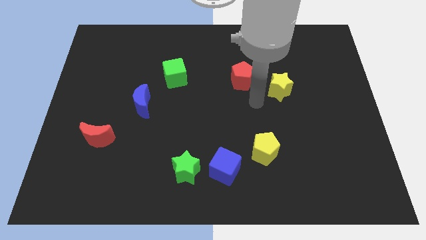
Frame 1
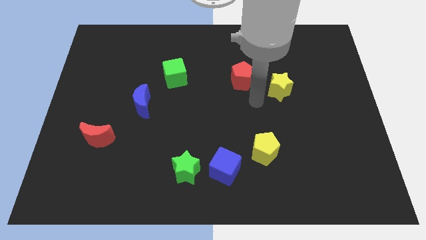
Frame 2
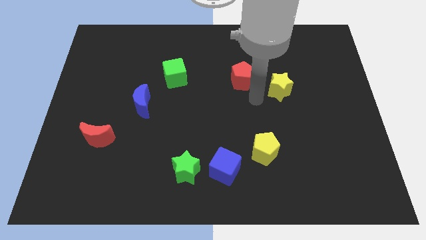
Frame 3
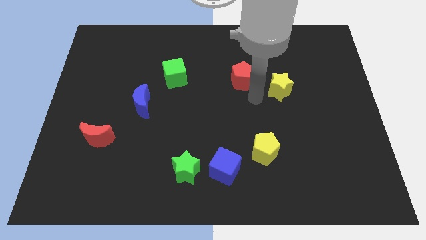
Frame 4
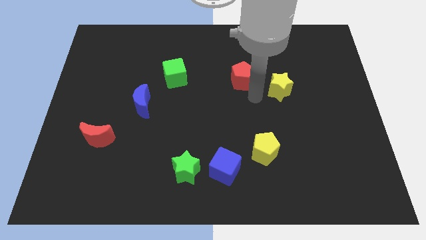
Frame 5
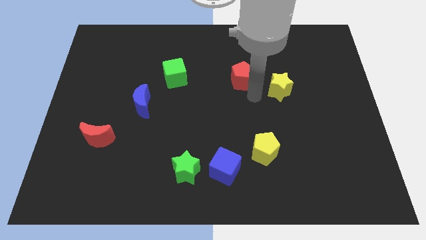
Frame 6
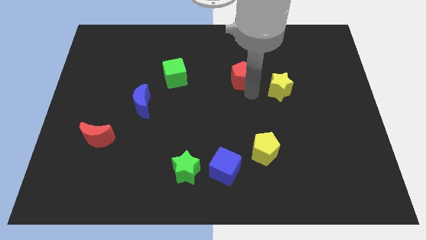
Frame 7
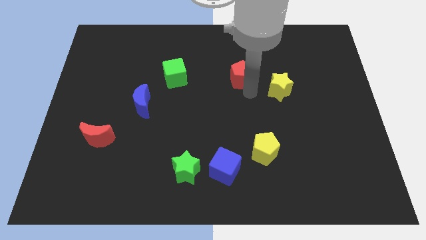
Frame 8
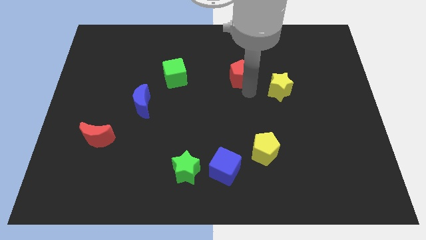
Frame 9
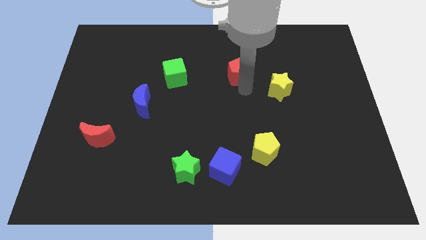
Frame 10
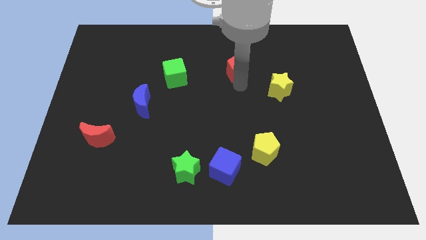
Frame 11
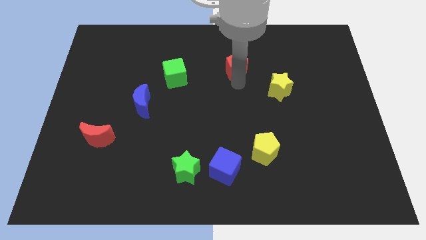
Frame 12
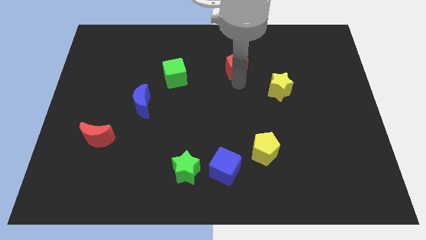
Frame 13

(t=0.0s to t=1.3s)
touch the bottom of red pentagon

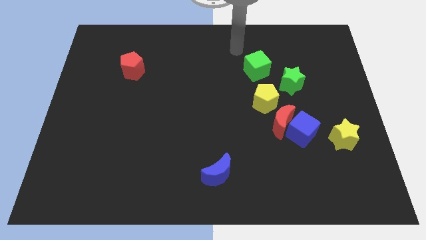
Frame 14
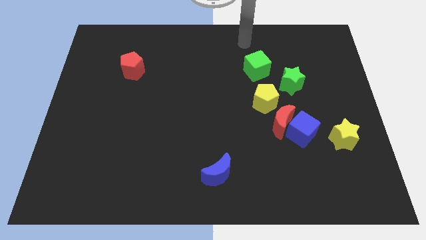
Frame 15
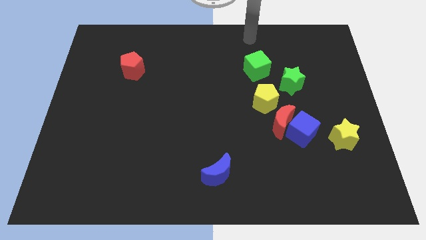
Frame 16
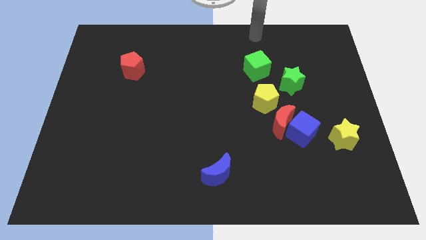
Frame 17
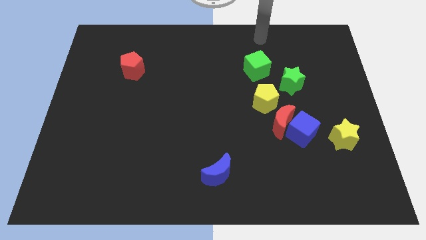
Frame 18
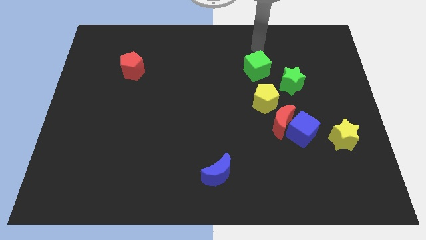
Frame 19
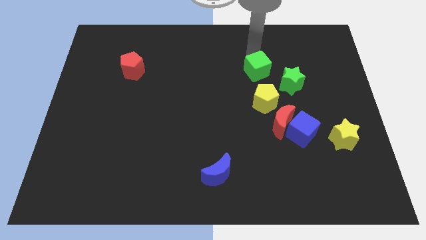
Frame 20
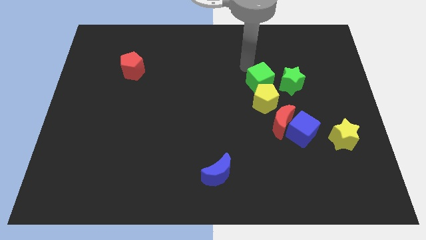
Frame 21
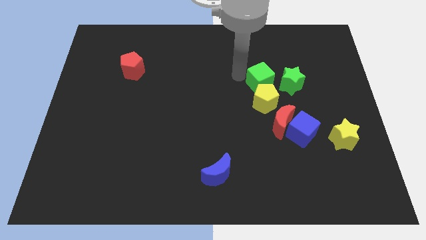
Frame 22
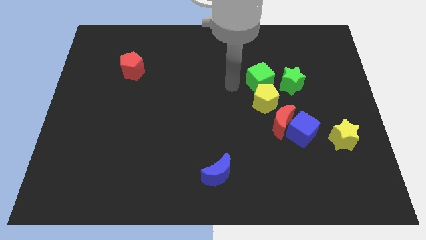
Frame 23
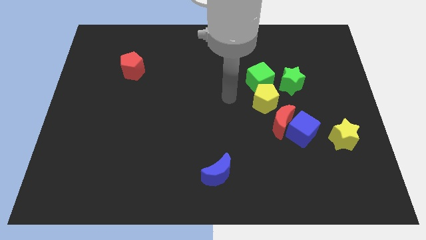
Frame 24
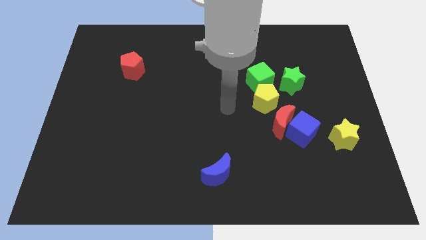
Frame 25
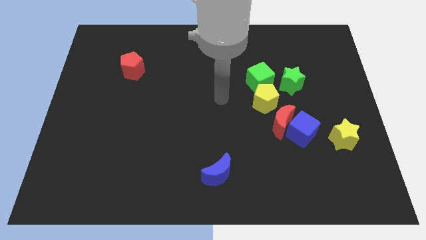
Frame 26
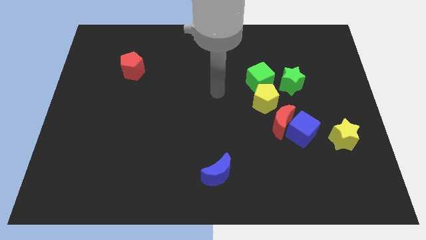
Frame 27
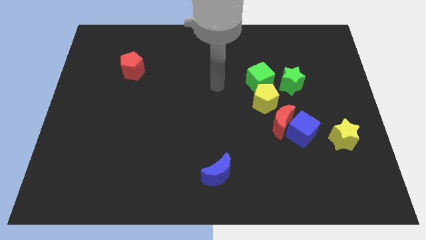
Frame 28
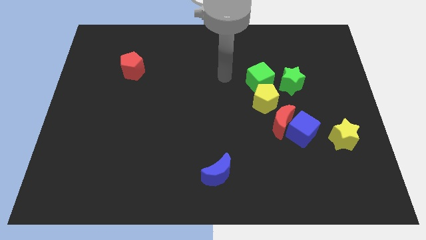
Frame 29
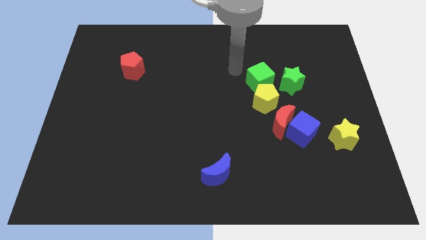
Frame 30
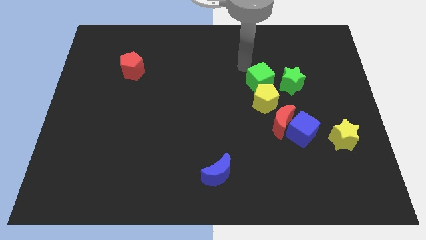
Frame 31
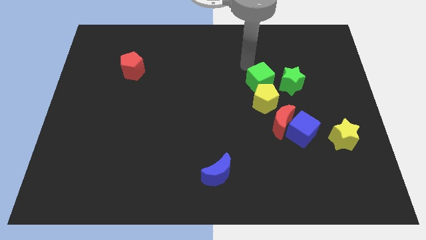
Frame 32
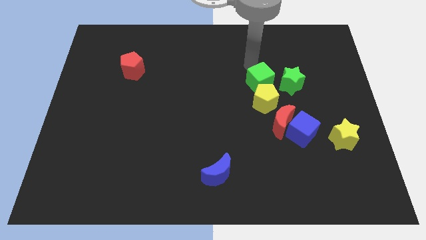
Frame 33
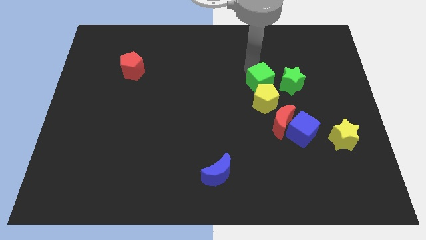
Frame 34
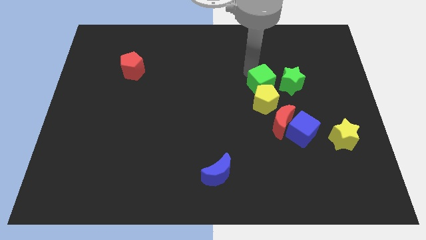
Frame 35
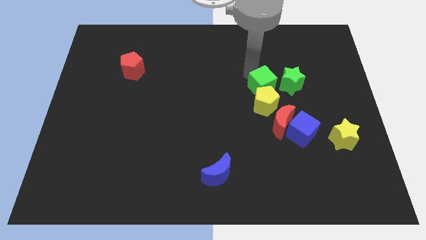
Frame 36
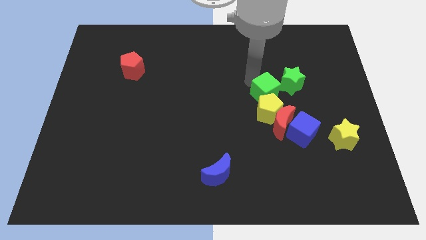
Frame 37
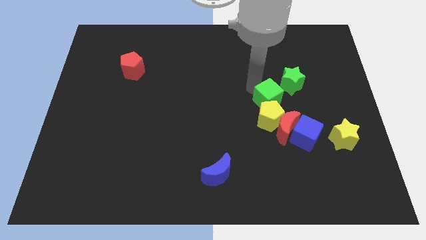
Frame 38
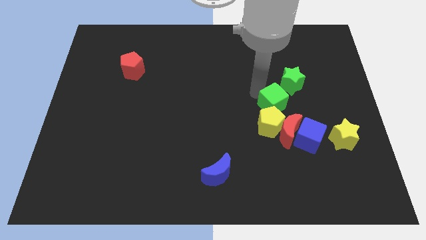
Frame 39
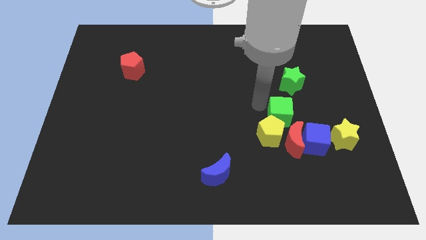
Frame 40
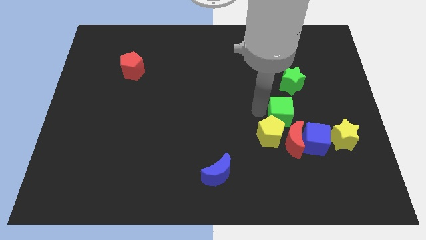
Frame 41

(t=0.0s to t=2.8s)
push the green cube into yellow pentagon

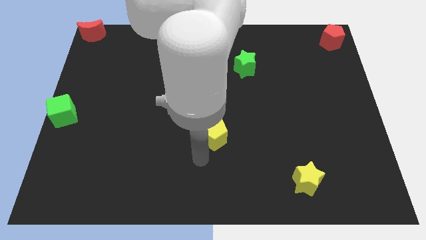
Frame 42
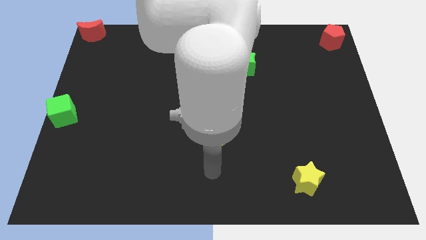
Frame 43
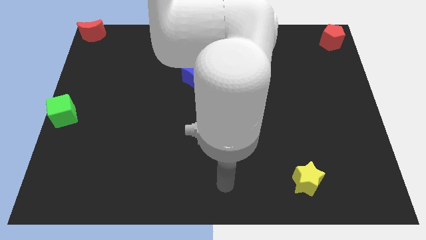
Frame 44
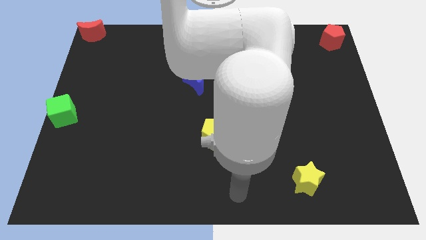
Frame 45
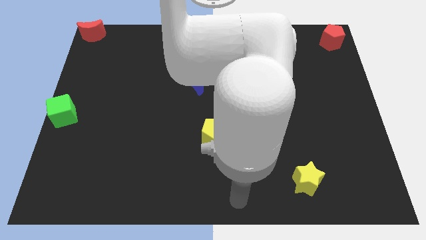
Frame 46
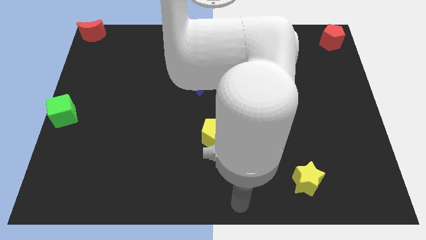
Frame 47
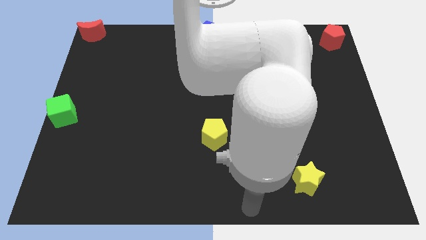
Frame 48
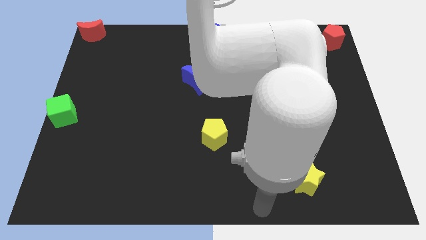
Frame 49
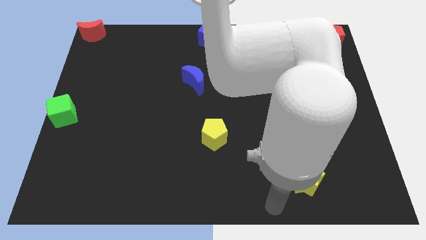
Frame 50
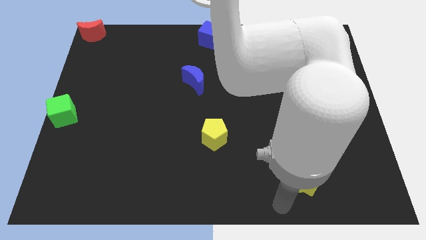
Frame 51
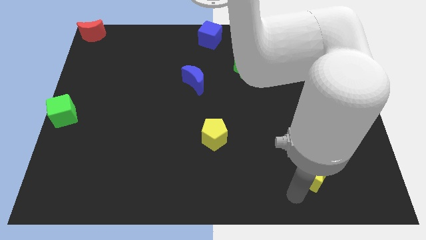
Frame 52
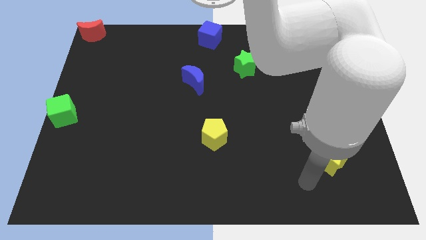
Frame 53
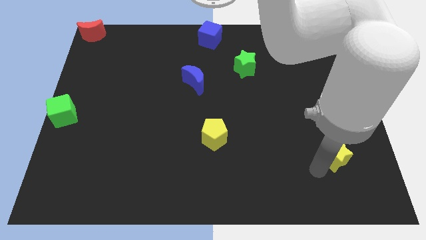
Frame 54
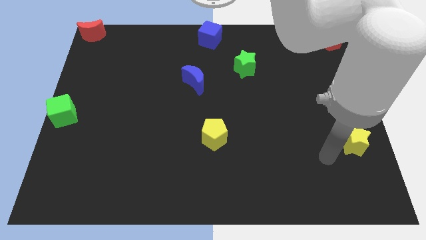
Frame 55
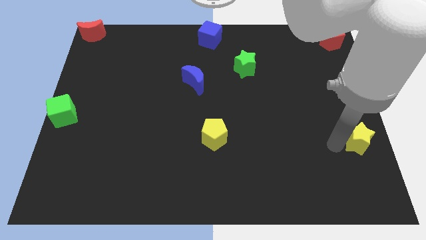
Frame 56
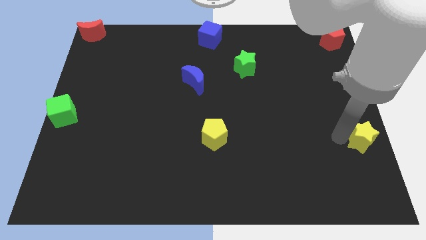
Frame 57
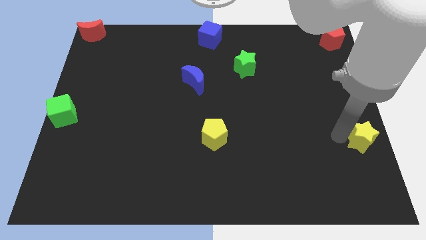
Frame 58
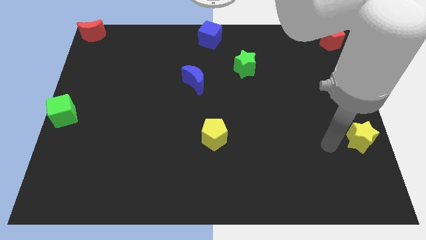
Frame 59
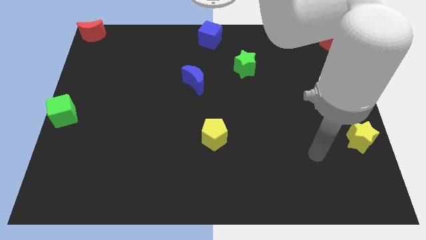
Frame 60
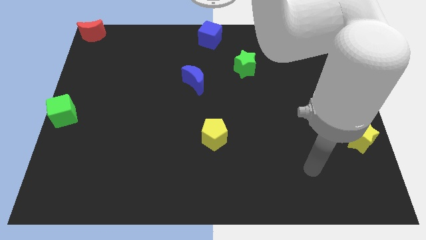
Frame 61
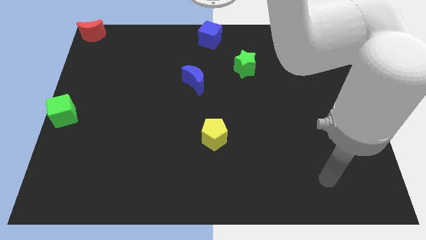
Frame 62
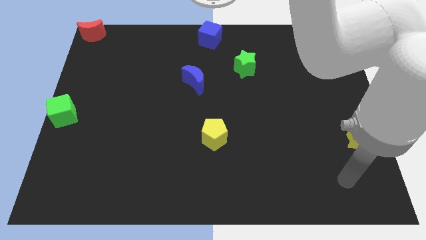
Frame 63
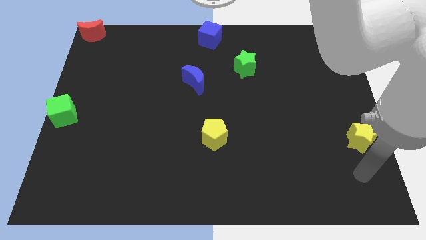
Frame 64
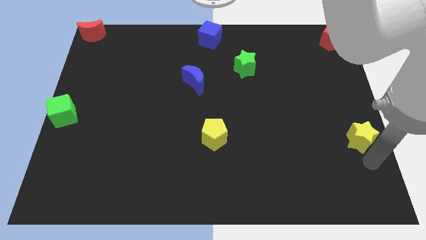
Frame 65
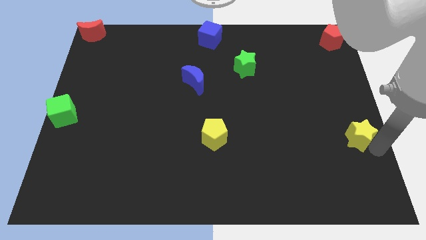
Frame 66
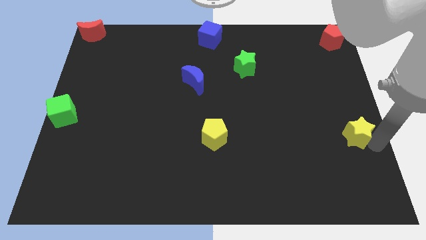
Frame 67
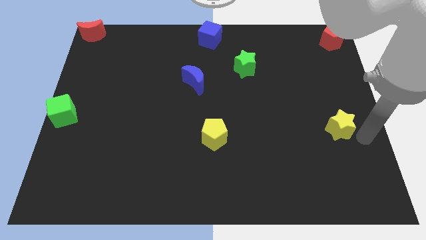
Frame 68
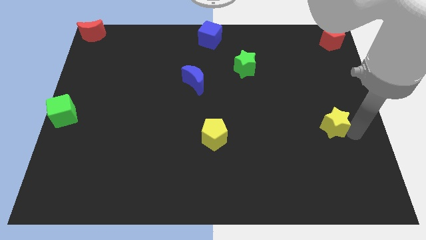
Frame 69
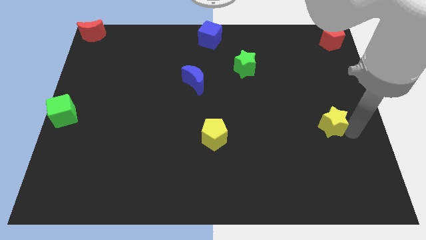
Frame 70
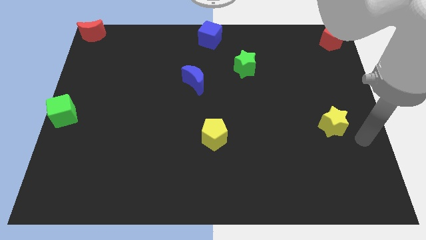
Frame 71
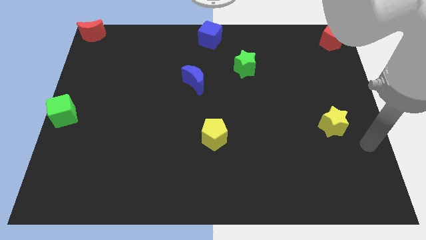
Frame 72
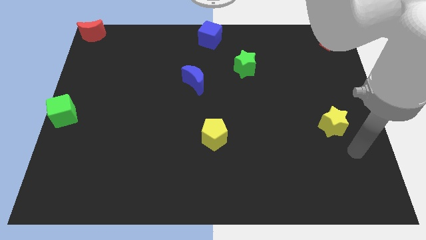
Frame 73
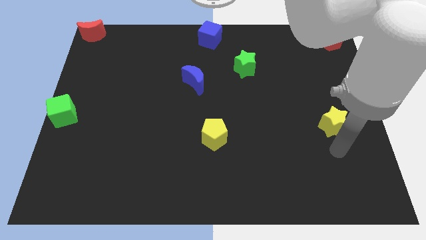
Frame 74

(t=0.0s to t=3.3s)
slide yellow star slightly upwards

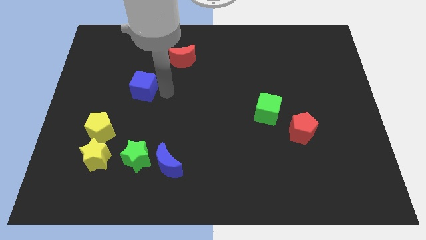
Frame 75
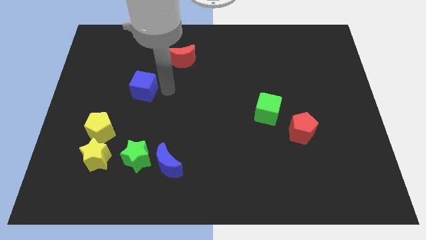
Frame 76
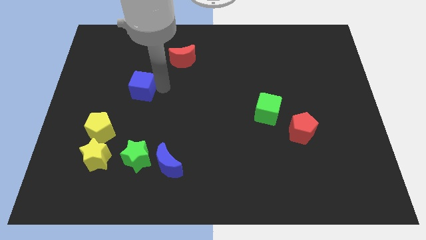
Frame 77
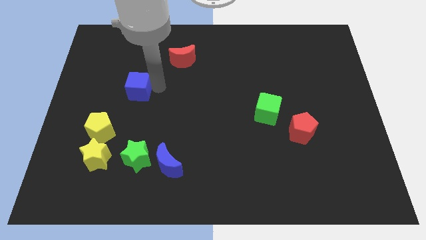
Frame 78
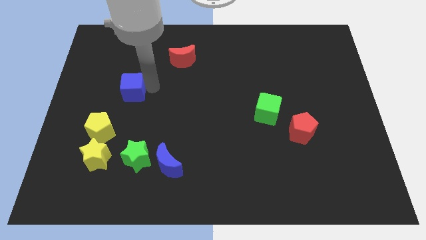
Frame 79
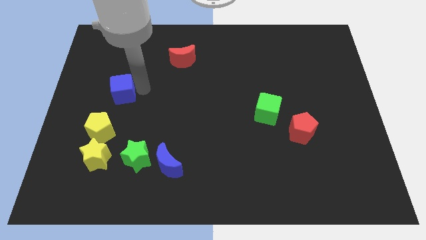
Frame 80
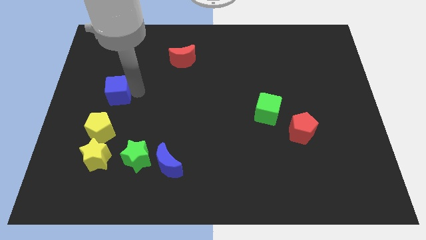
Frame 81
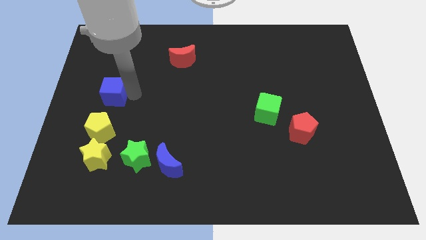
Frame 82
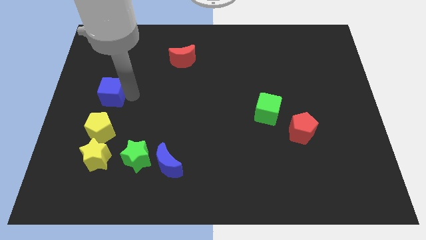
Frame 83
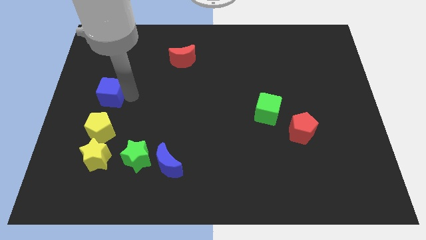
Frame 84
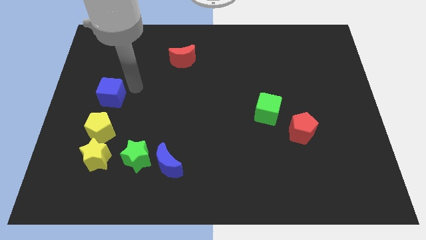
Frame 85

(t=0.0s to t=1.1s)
place the blue cube on the top of yellow pentagon

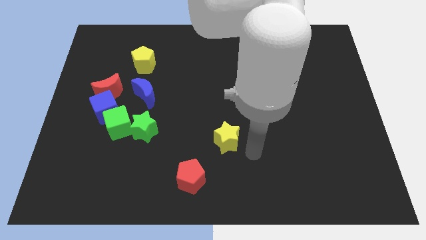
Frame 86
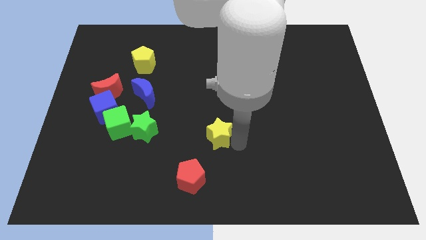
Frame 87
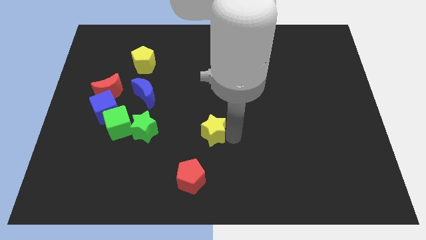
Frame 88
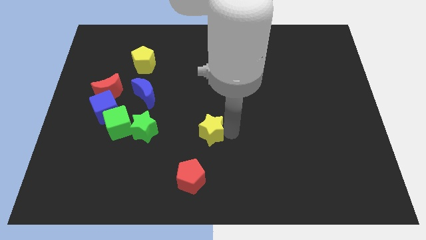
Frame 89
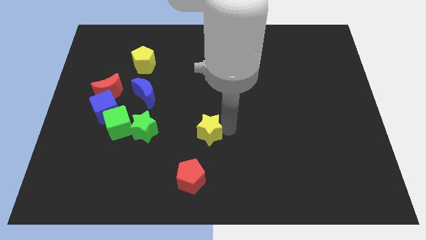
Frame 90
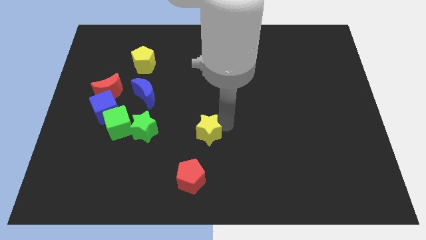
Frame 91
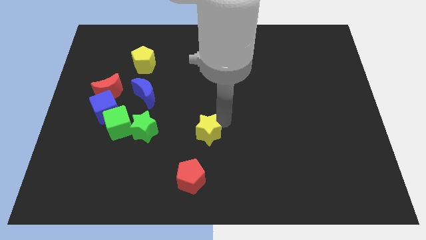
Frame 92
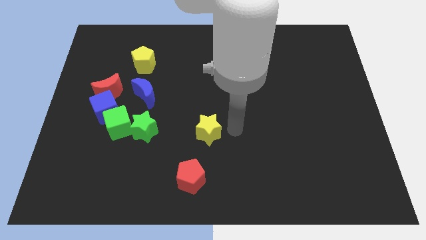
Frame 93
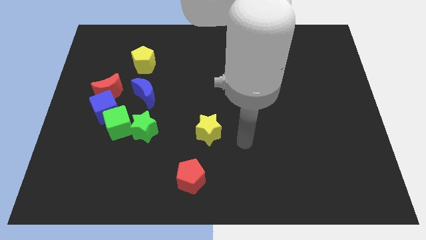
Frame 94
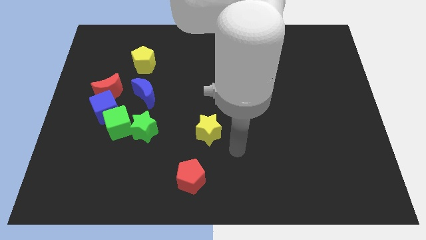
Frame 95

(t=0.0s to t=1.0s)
move the yellow star to the left of the board
